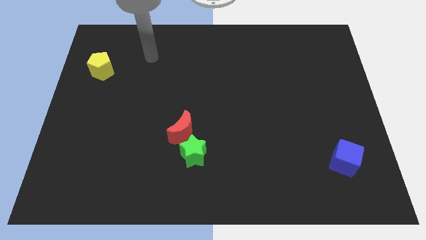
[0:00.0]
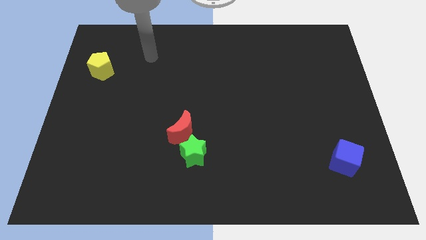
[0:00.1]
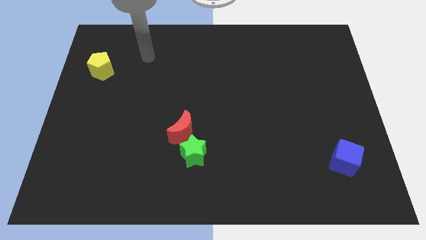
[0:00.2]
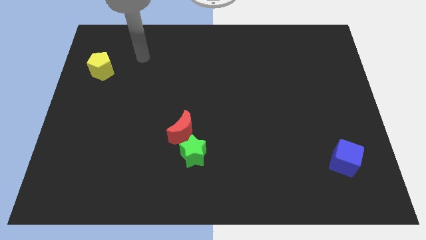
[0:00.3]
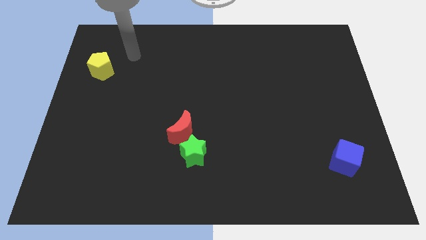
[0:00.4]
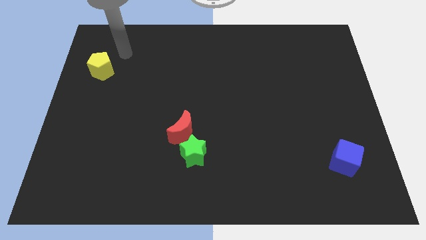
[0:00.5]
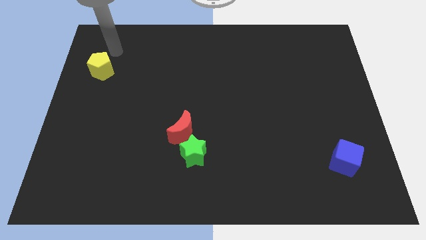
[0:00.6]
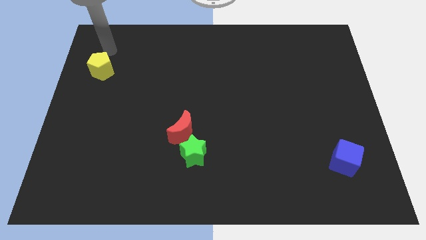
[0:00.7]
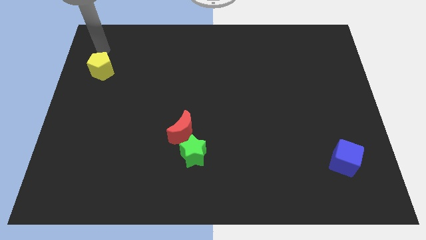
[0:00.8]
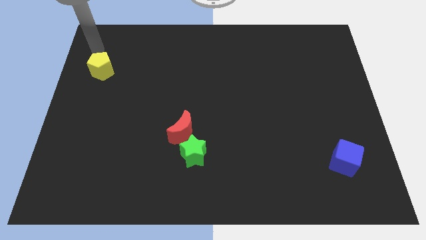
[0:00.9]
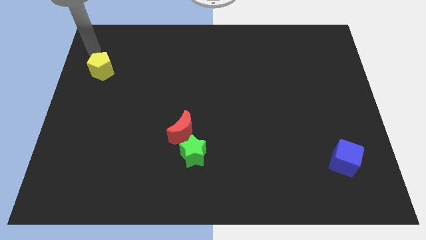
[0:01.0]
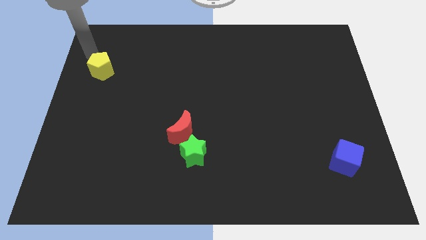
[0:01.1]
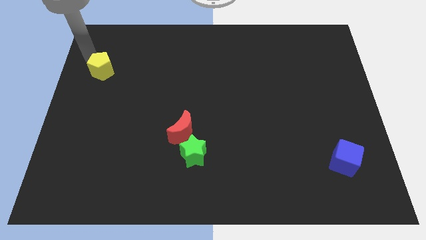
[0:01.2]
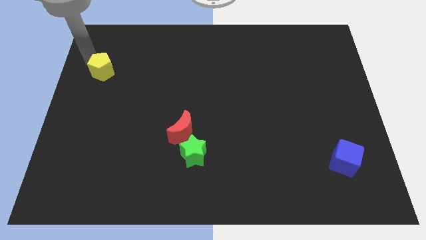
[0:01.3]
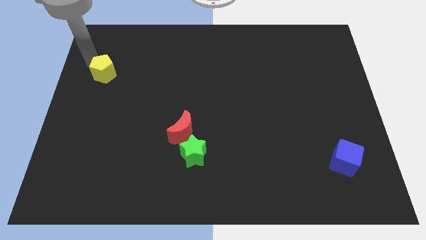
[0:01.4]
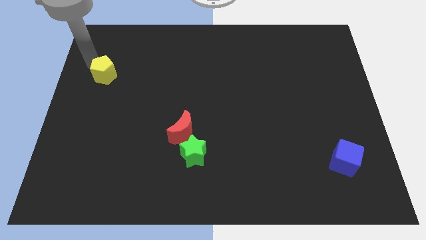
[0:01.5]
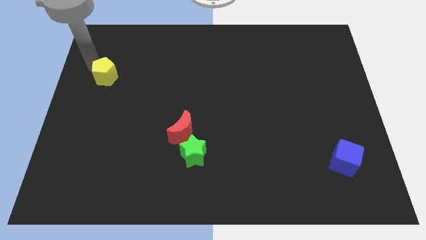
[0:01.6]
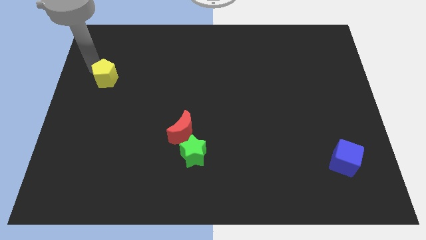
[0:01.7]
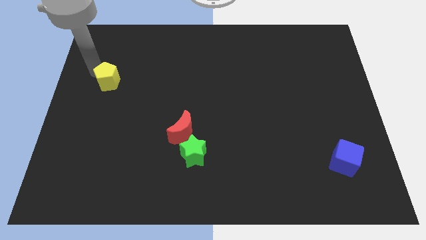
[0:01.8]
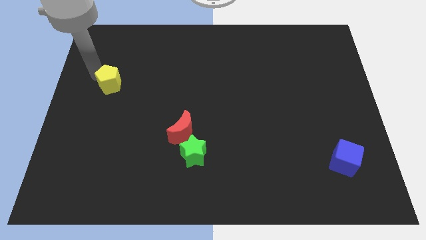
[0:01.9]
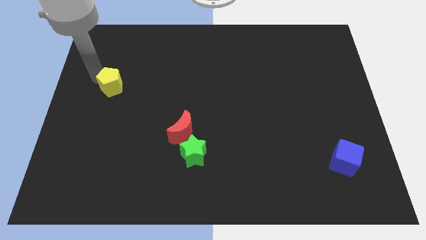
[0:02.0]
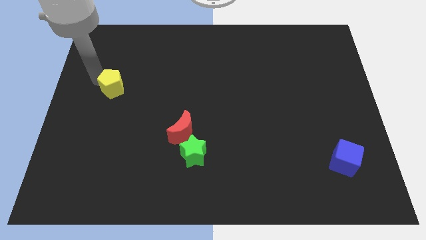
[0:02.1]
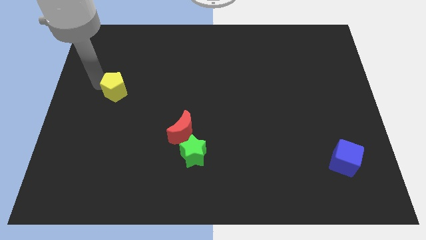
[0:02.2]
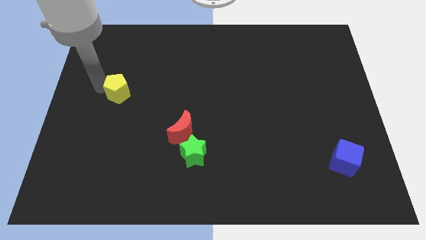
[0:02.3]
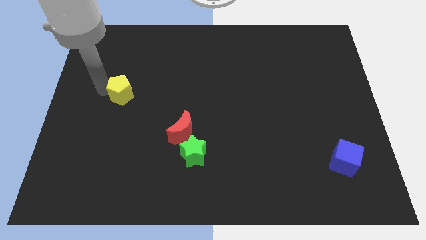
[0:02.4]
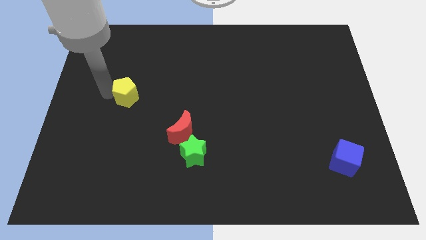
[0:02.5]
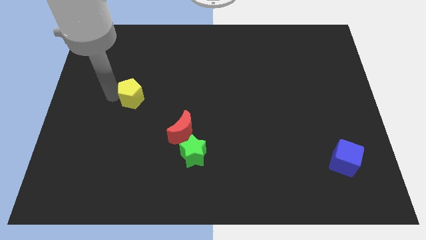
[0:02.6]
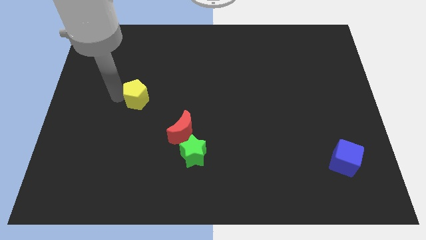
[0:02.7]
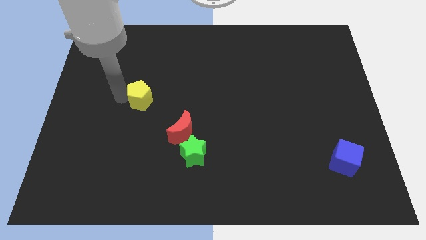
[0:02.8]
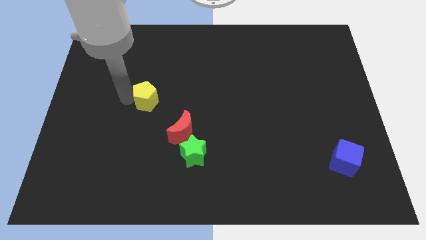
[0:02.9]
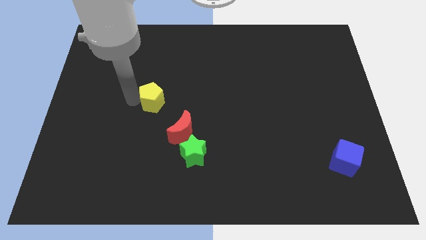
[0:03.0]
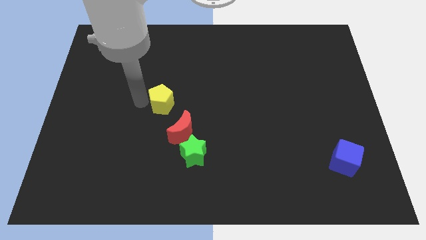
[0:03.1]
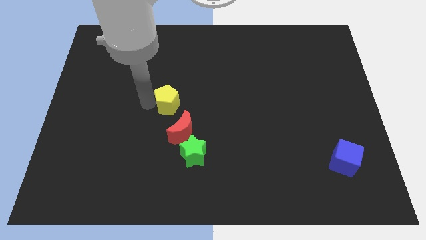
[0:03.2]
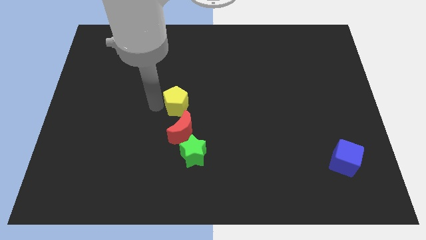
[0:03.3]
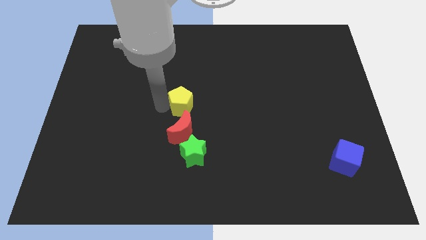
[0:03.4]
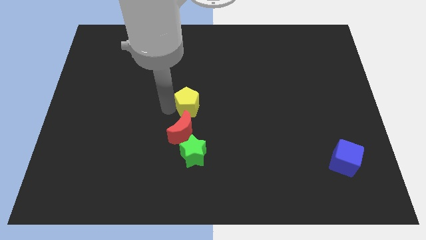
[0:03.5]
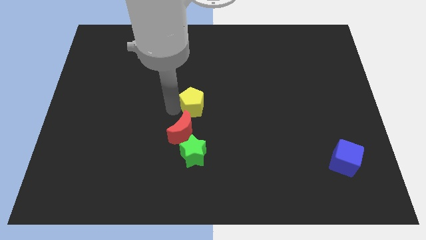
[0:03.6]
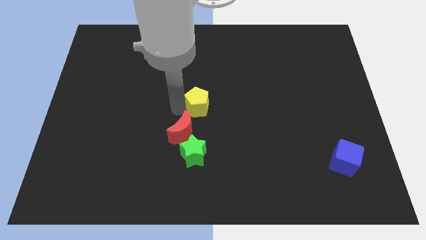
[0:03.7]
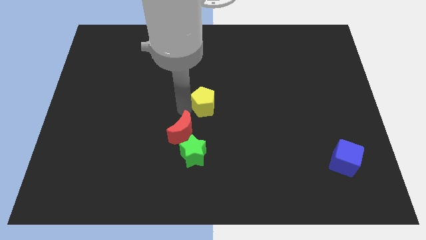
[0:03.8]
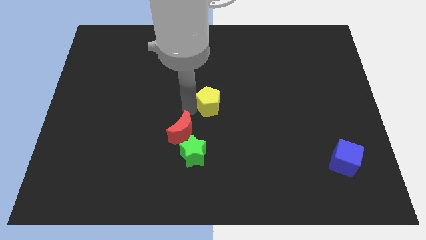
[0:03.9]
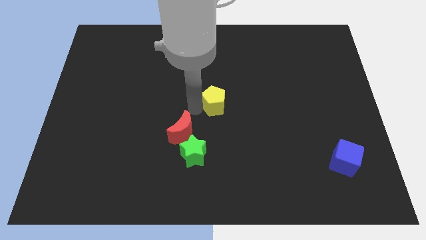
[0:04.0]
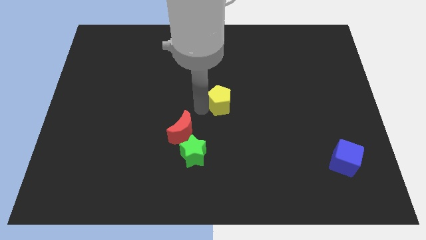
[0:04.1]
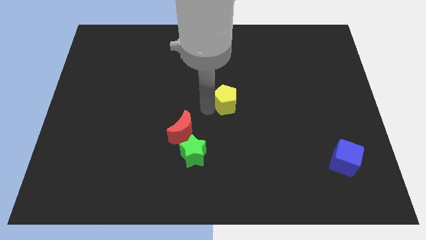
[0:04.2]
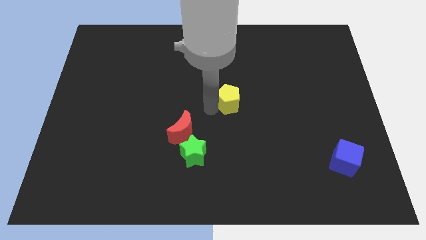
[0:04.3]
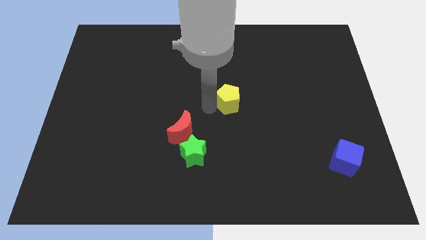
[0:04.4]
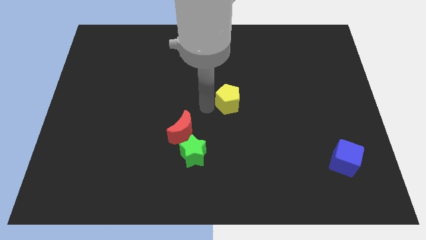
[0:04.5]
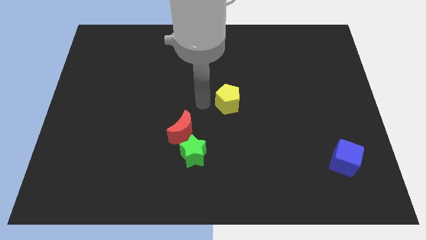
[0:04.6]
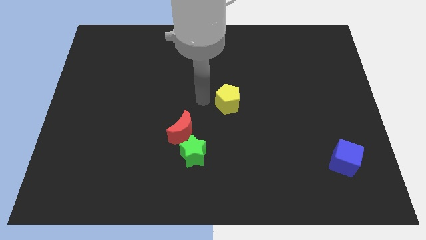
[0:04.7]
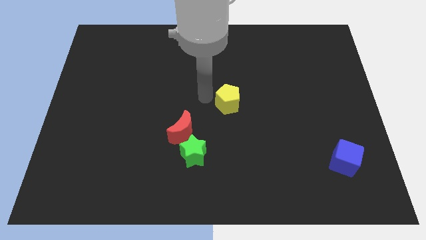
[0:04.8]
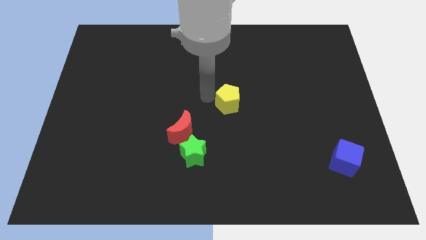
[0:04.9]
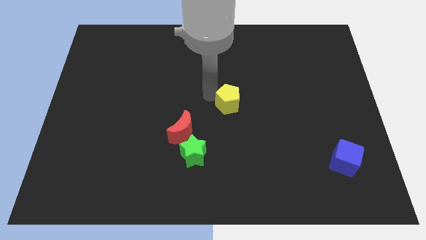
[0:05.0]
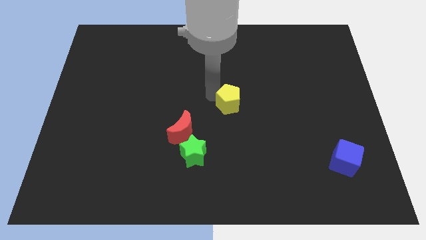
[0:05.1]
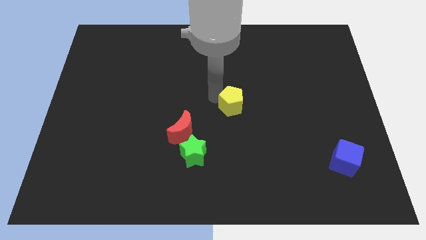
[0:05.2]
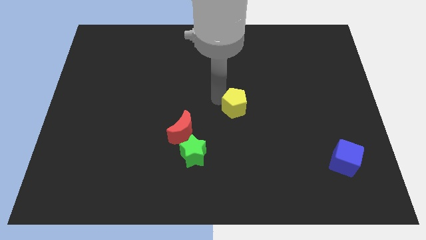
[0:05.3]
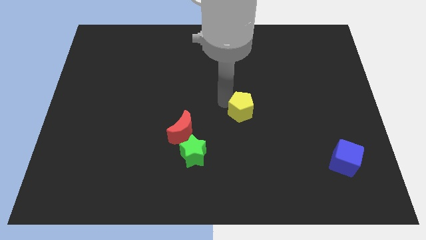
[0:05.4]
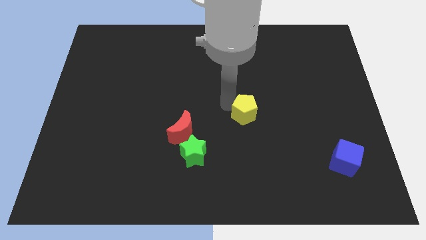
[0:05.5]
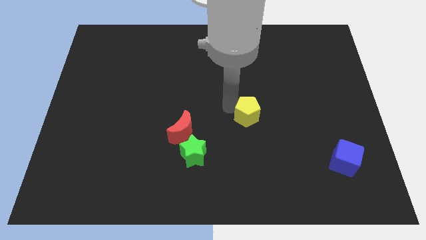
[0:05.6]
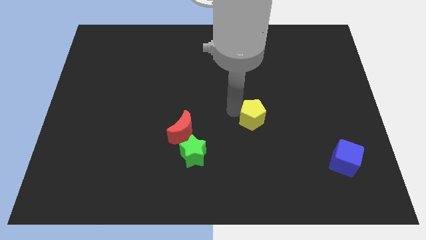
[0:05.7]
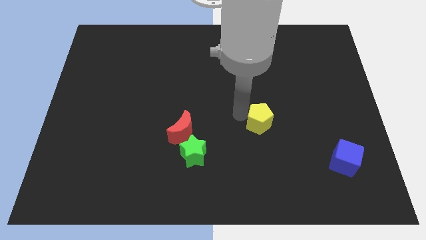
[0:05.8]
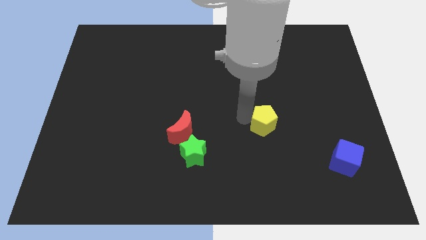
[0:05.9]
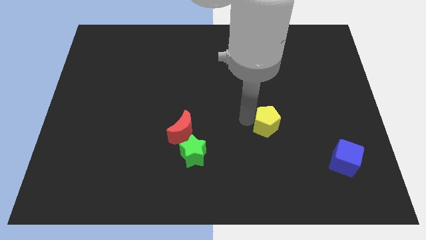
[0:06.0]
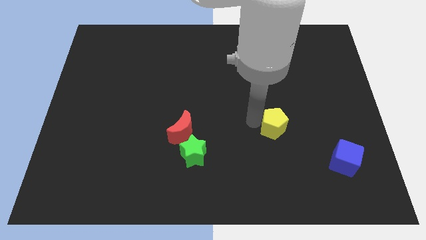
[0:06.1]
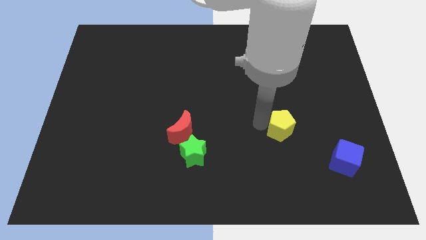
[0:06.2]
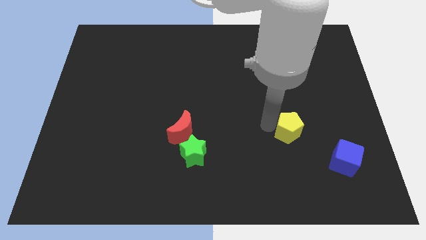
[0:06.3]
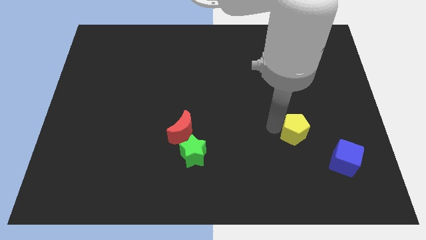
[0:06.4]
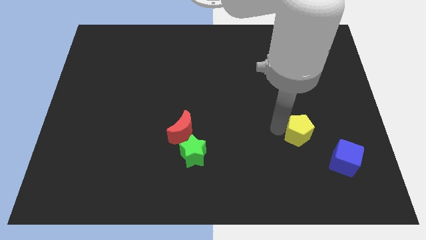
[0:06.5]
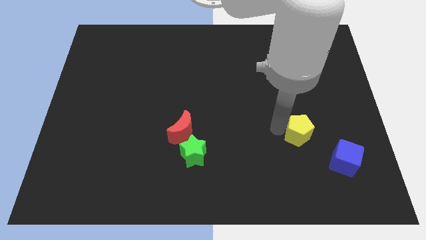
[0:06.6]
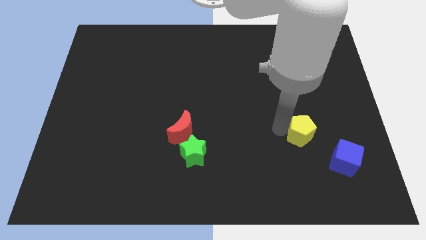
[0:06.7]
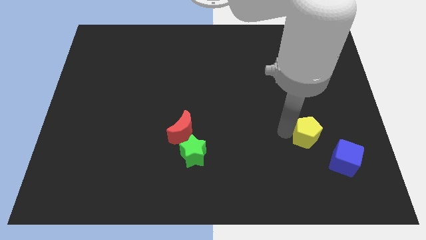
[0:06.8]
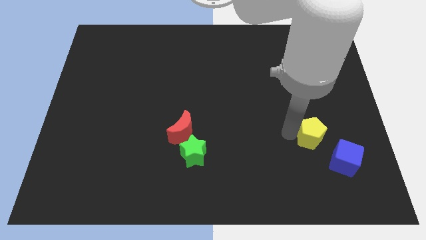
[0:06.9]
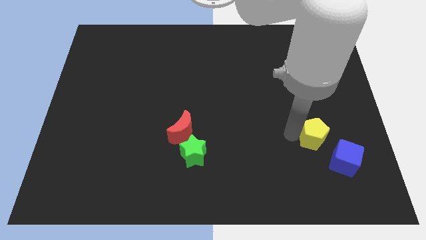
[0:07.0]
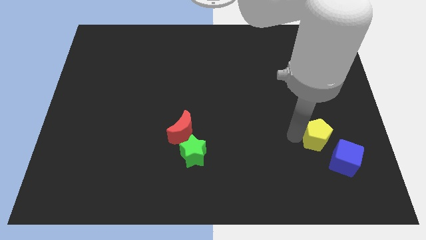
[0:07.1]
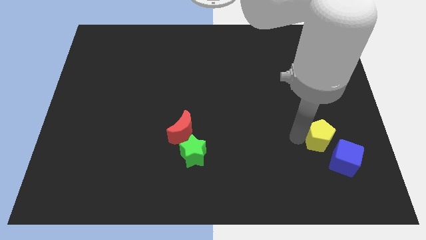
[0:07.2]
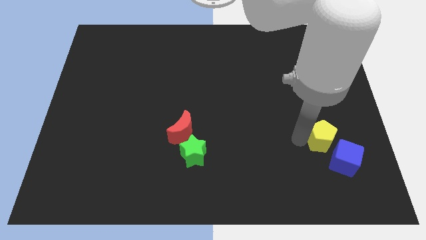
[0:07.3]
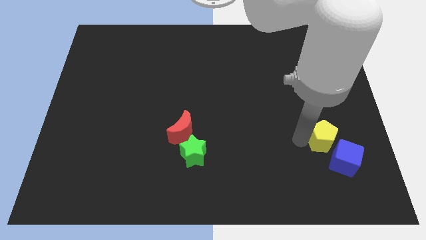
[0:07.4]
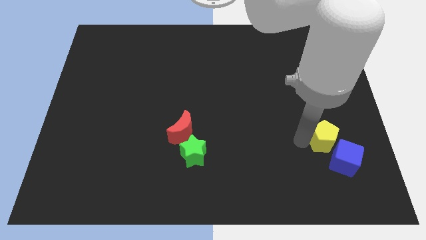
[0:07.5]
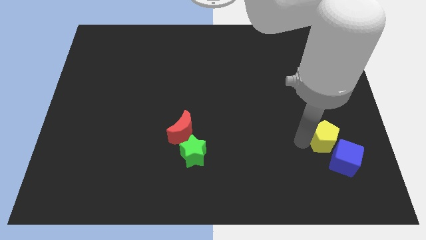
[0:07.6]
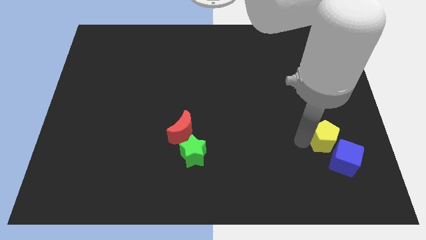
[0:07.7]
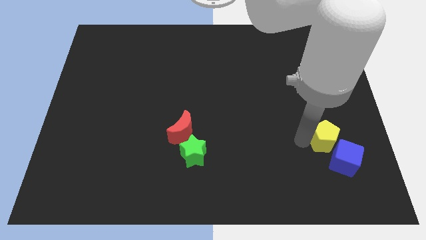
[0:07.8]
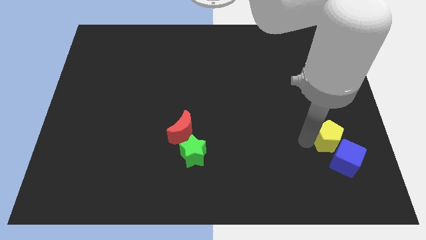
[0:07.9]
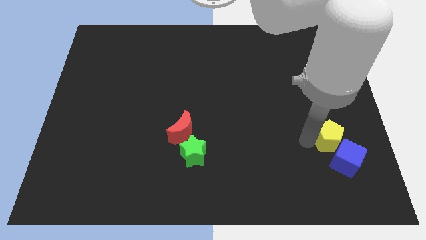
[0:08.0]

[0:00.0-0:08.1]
slide the yellow block towards the cube

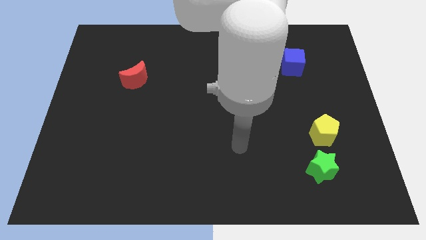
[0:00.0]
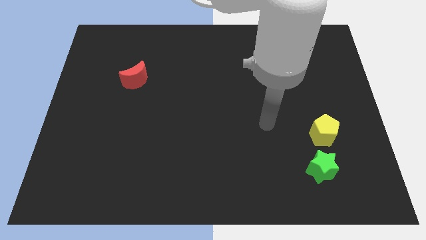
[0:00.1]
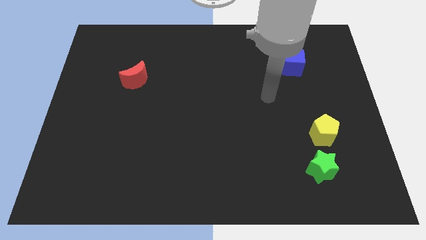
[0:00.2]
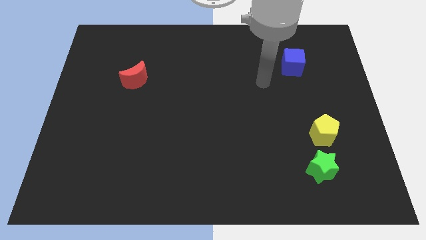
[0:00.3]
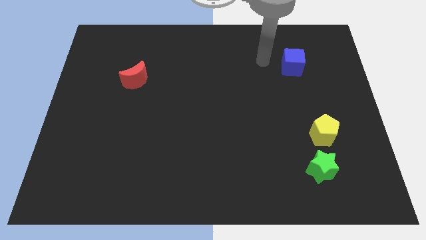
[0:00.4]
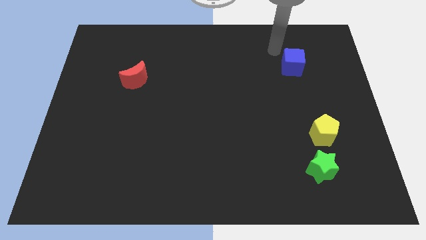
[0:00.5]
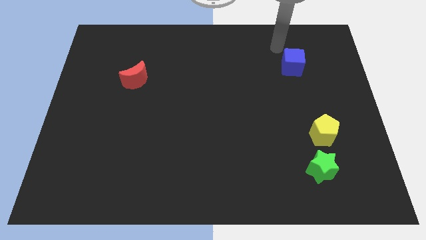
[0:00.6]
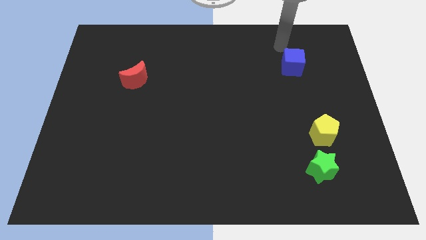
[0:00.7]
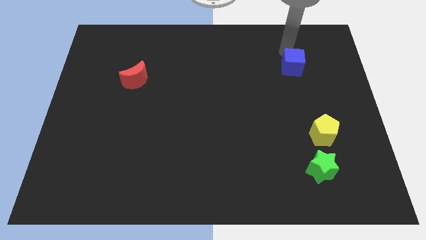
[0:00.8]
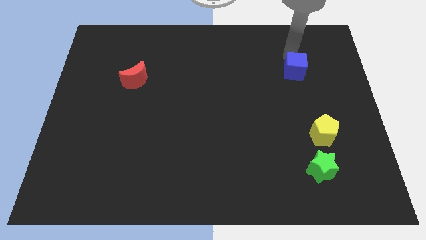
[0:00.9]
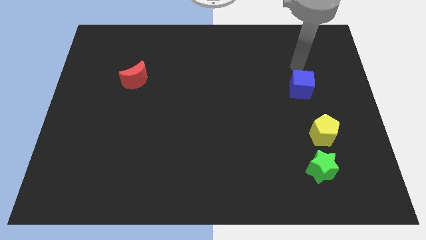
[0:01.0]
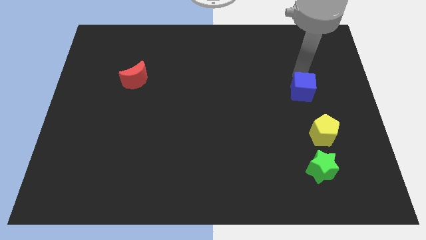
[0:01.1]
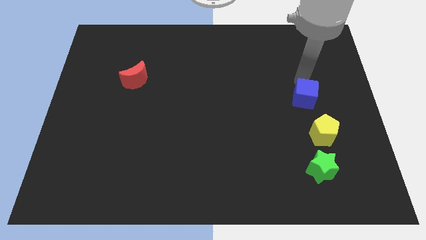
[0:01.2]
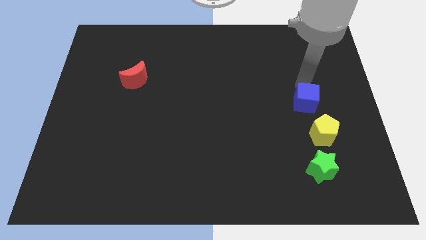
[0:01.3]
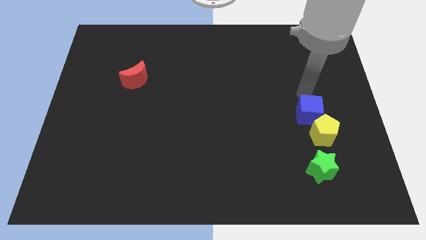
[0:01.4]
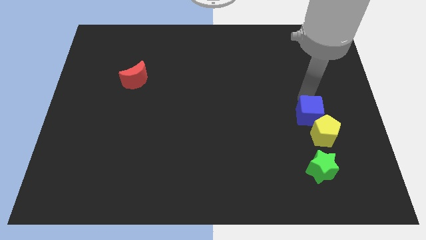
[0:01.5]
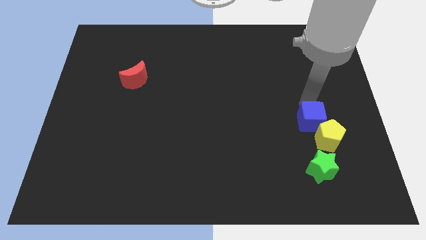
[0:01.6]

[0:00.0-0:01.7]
put the blue cube to the yellow block
